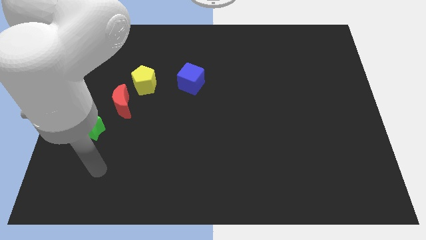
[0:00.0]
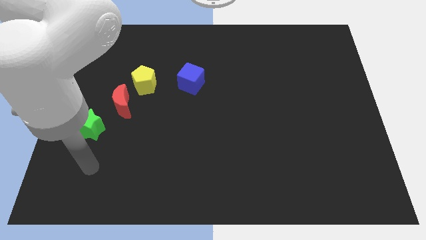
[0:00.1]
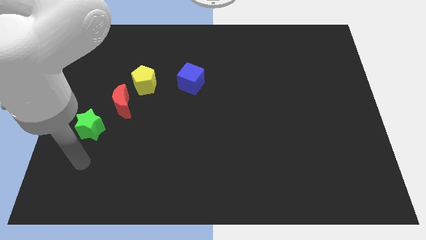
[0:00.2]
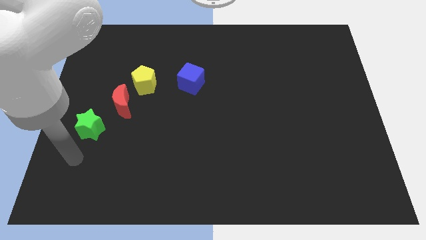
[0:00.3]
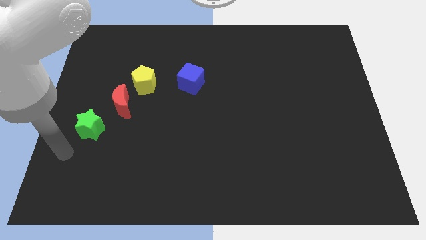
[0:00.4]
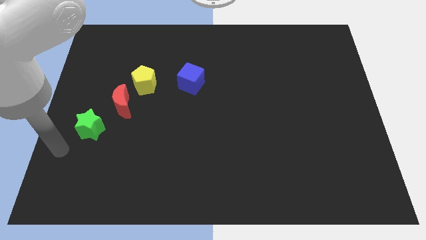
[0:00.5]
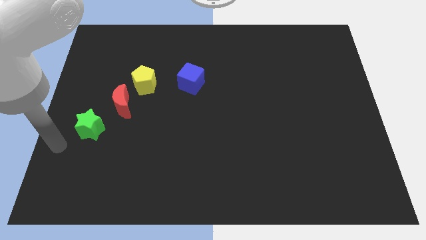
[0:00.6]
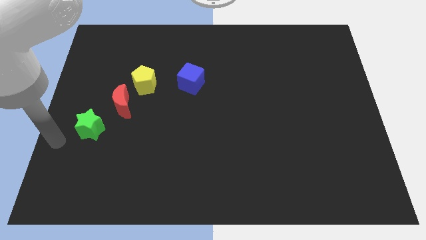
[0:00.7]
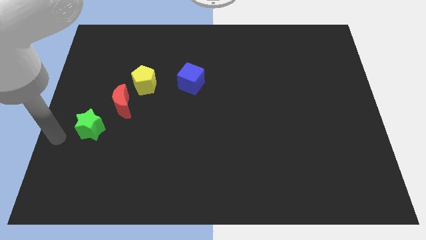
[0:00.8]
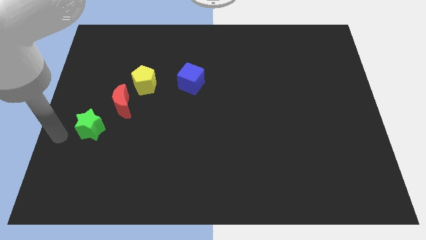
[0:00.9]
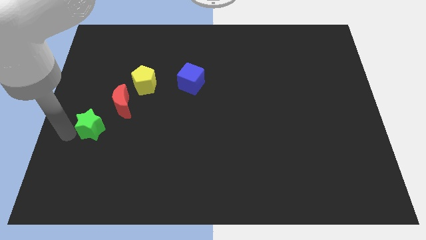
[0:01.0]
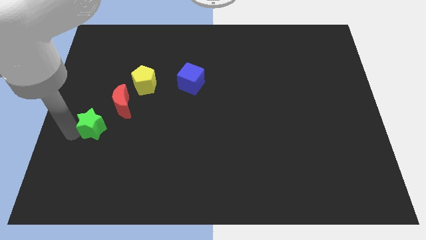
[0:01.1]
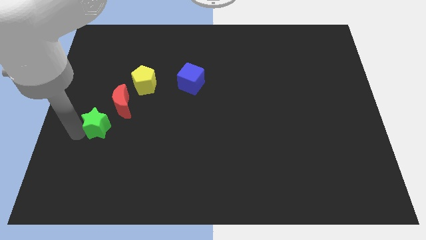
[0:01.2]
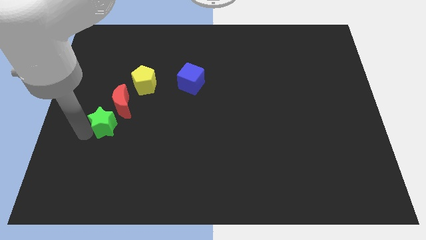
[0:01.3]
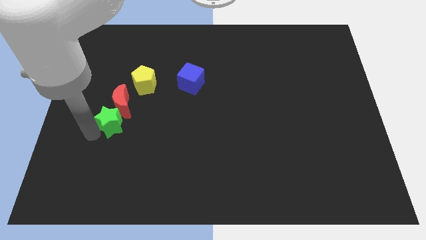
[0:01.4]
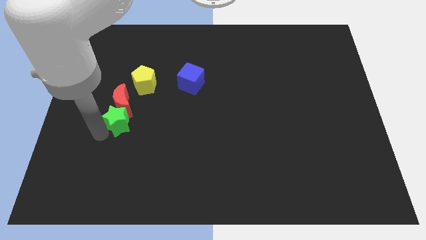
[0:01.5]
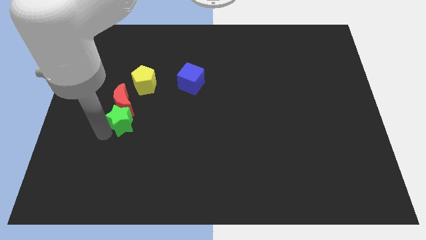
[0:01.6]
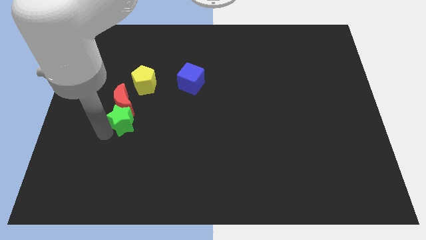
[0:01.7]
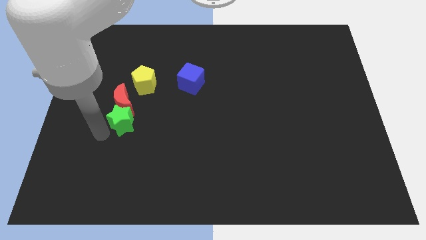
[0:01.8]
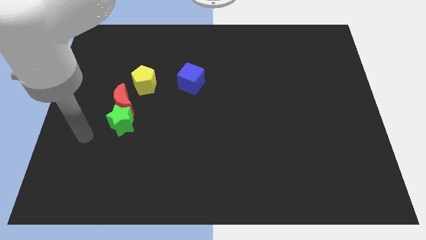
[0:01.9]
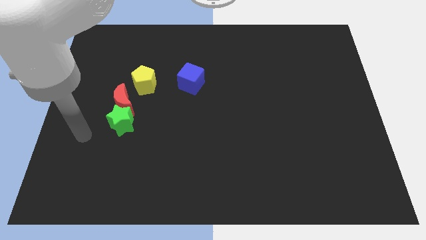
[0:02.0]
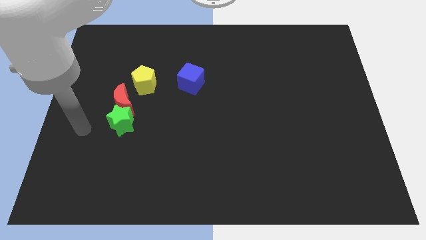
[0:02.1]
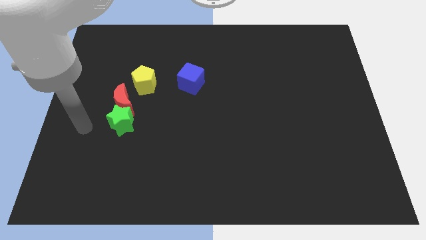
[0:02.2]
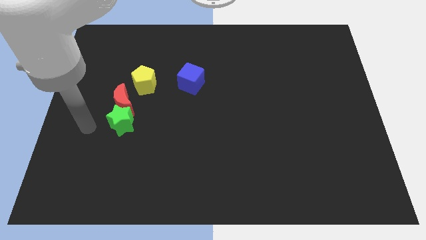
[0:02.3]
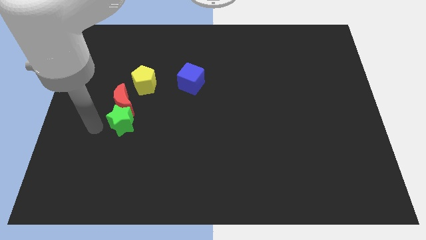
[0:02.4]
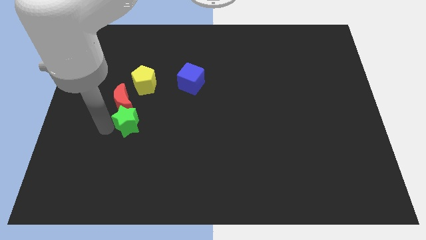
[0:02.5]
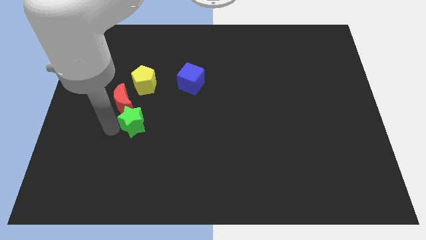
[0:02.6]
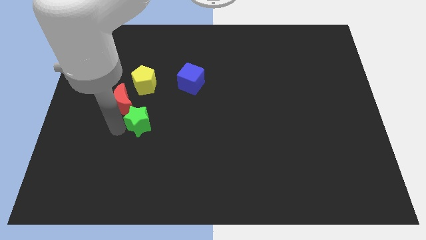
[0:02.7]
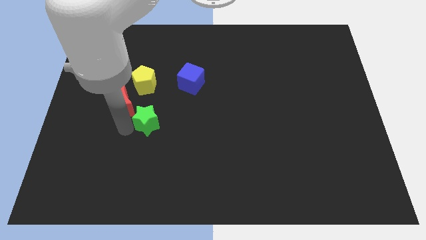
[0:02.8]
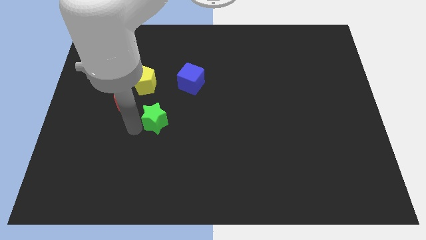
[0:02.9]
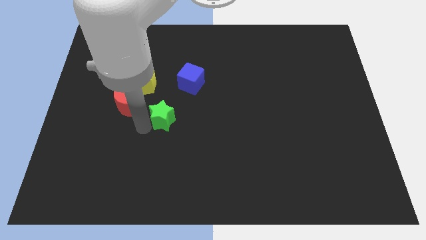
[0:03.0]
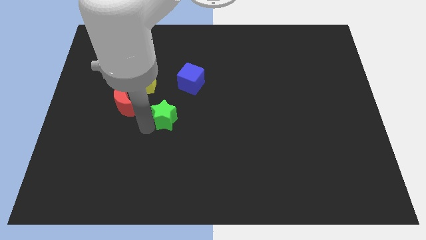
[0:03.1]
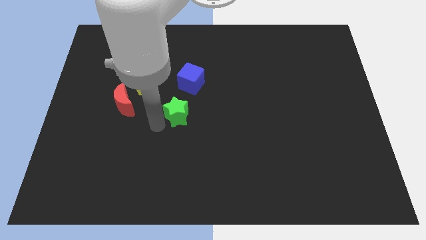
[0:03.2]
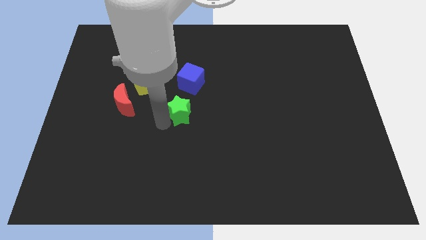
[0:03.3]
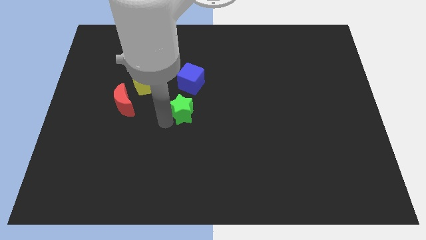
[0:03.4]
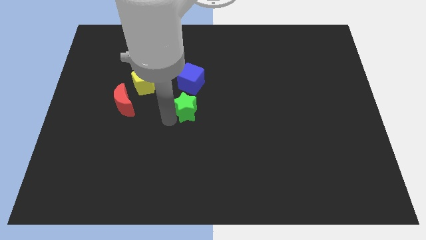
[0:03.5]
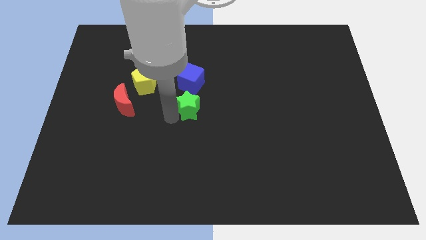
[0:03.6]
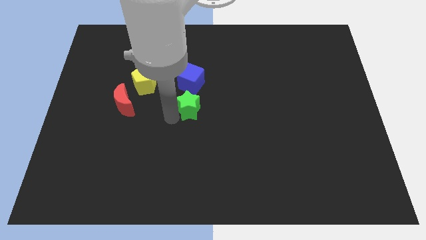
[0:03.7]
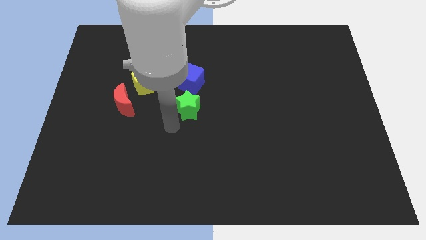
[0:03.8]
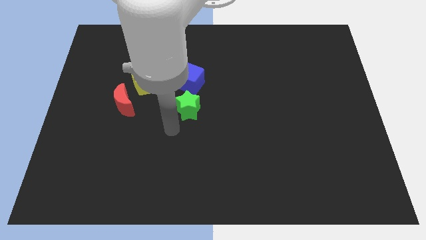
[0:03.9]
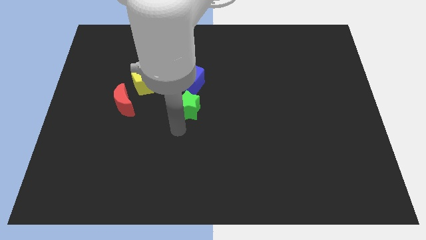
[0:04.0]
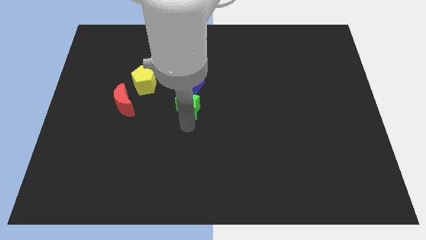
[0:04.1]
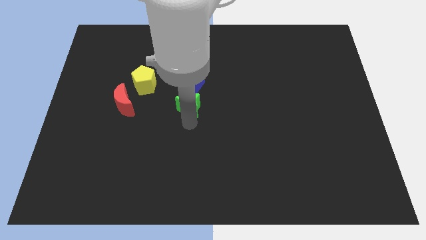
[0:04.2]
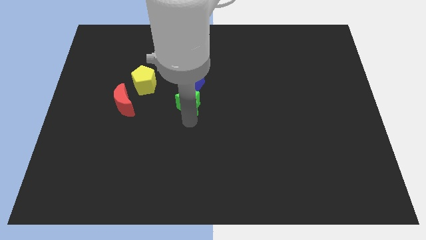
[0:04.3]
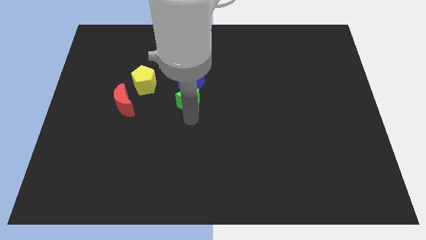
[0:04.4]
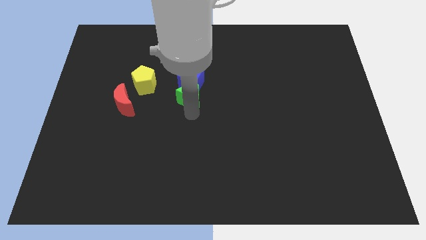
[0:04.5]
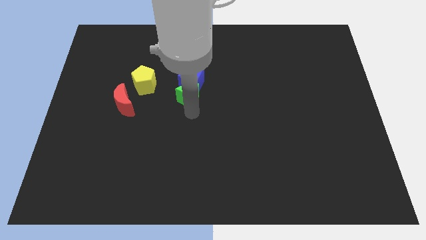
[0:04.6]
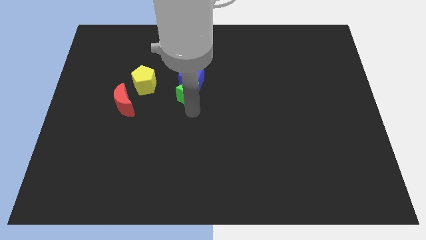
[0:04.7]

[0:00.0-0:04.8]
slide the green block close to the blue block

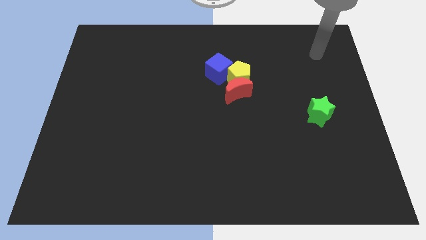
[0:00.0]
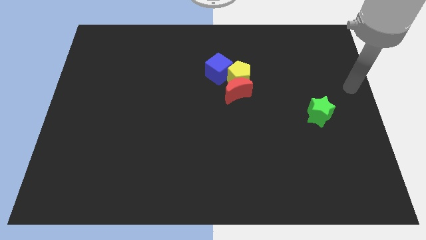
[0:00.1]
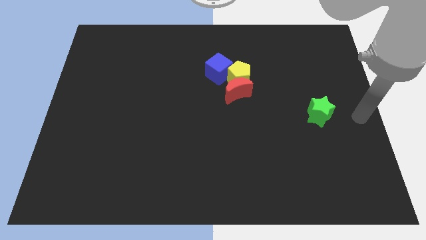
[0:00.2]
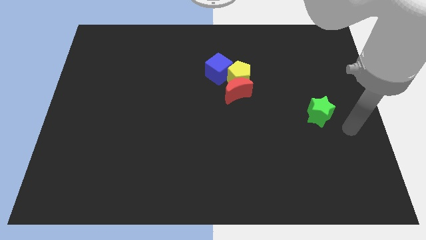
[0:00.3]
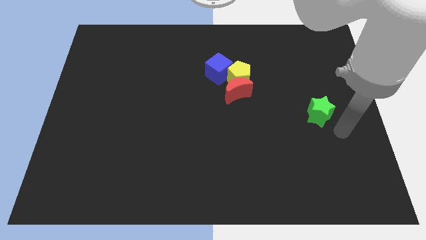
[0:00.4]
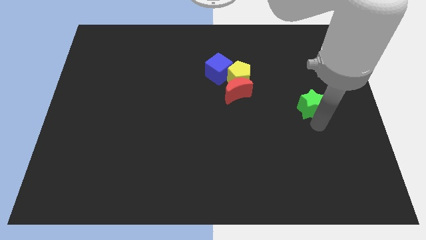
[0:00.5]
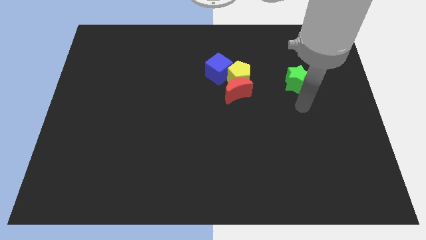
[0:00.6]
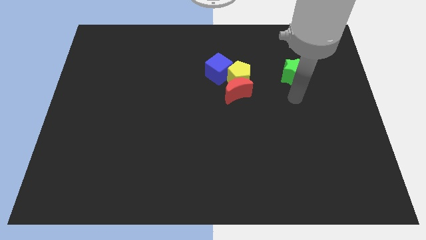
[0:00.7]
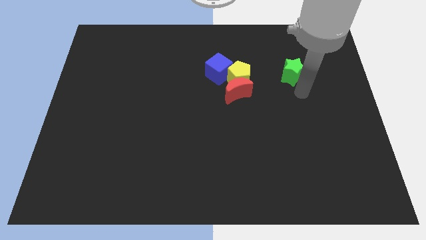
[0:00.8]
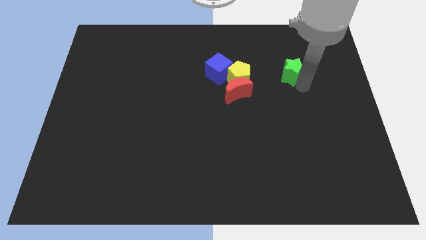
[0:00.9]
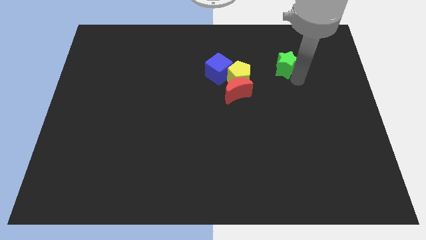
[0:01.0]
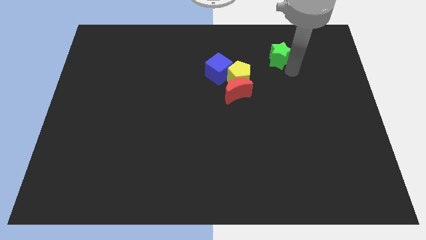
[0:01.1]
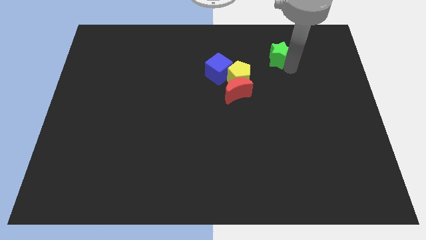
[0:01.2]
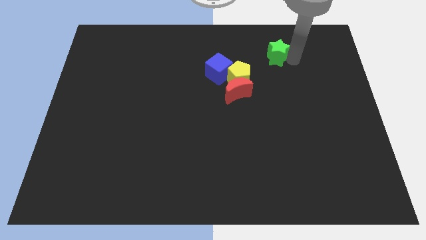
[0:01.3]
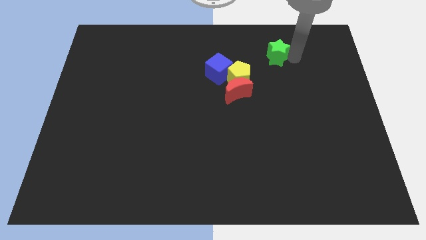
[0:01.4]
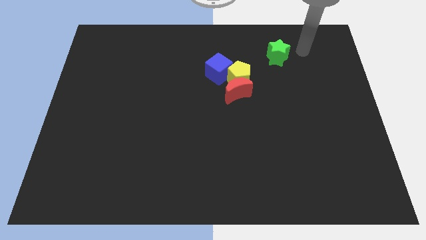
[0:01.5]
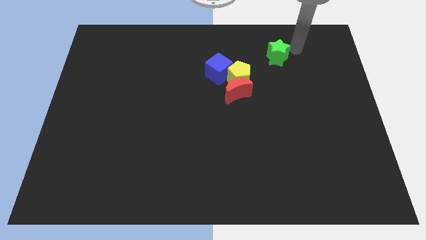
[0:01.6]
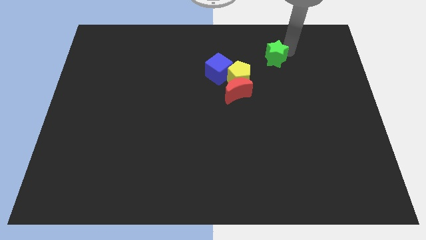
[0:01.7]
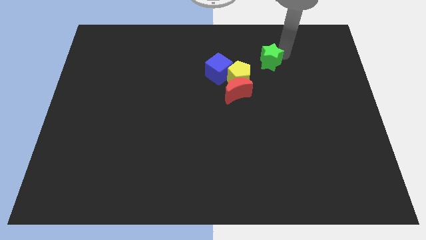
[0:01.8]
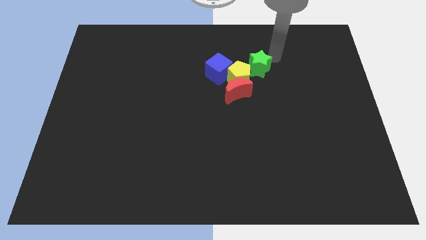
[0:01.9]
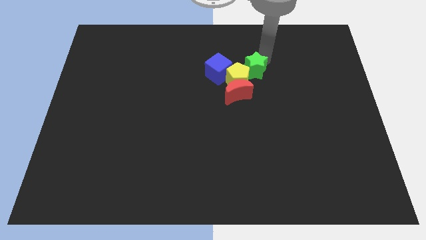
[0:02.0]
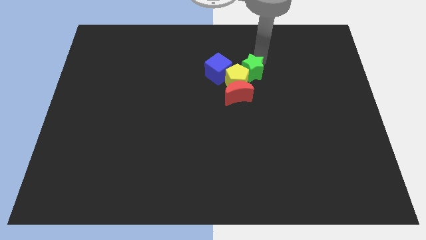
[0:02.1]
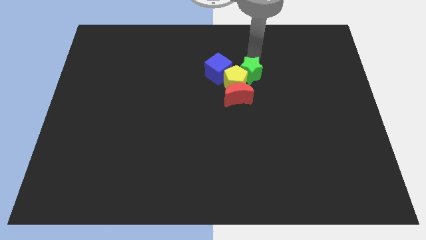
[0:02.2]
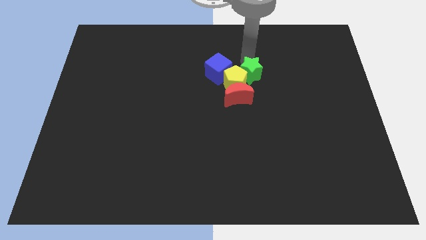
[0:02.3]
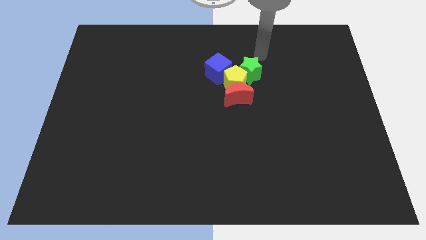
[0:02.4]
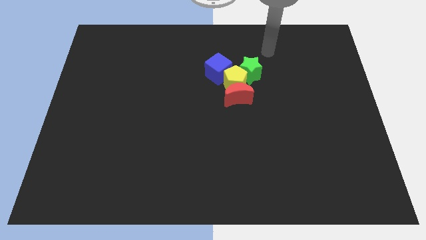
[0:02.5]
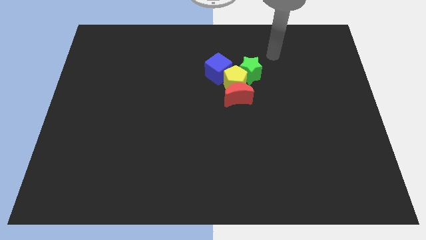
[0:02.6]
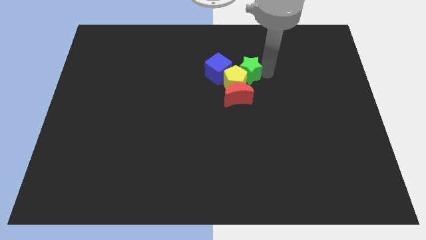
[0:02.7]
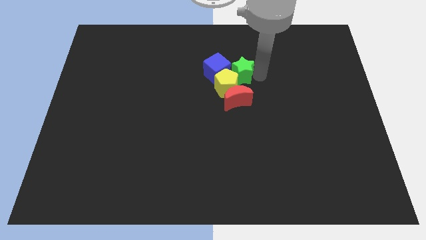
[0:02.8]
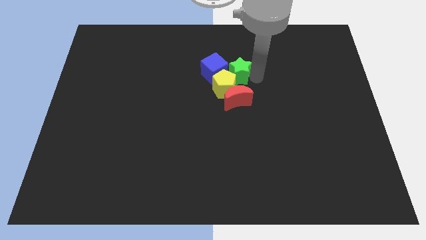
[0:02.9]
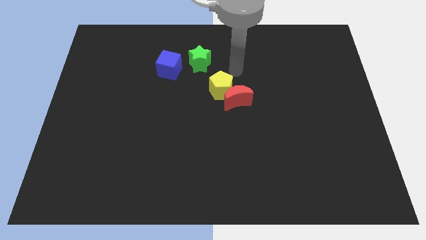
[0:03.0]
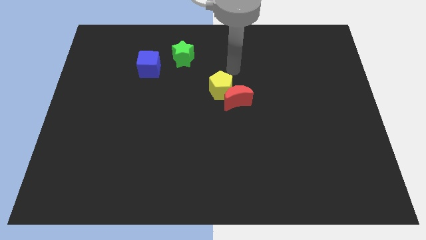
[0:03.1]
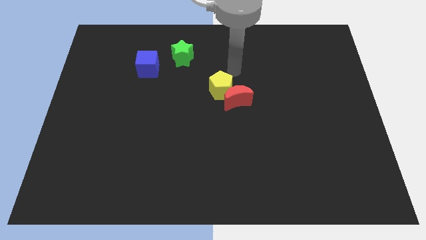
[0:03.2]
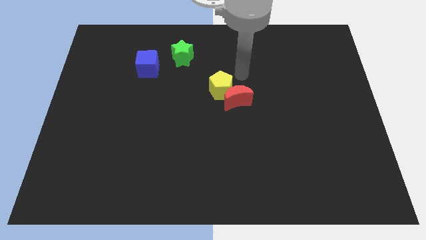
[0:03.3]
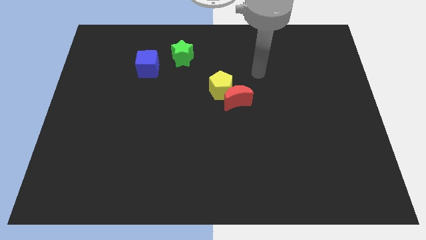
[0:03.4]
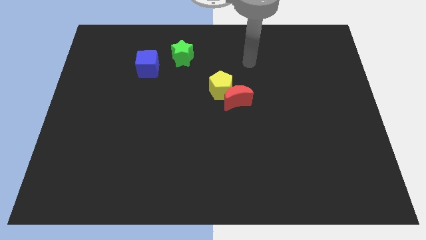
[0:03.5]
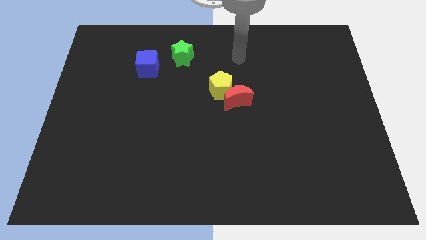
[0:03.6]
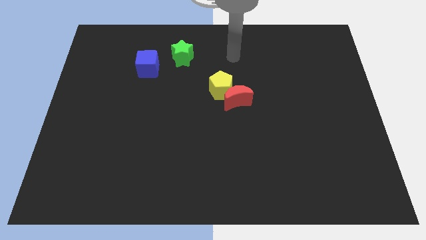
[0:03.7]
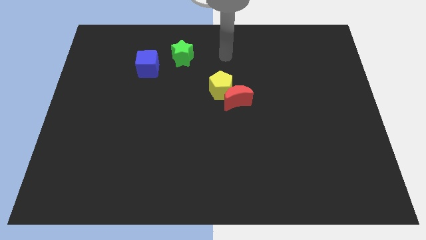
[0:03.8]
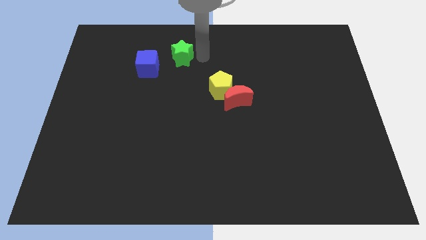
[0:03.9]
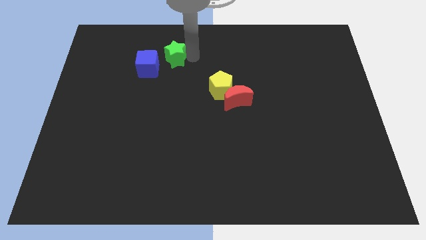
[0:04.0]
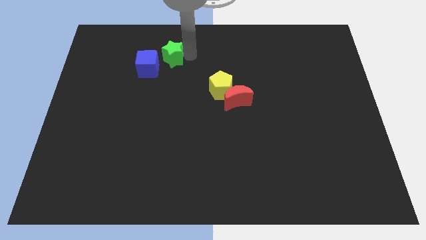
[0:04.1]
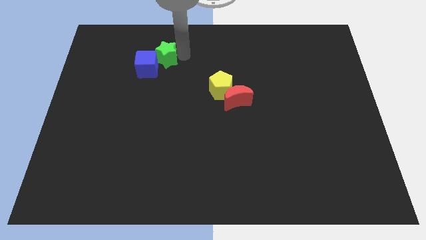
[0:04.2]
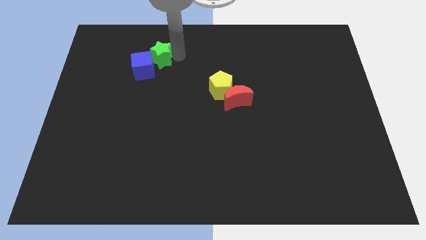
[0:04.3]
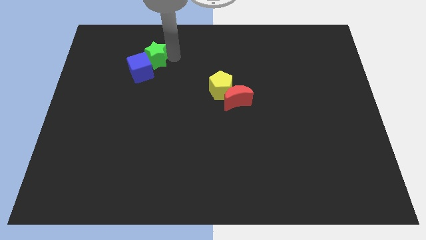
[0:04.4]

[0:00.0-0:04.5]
push the green star close to the blue cube
